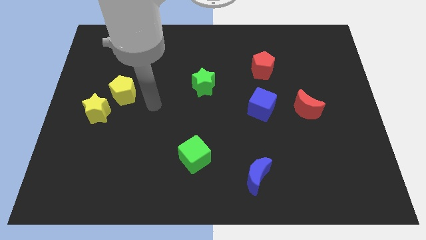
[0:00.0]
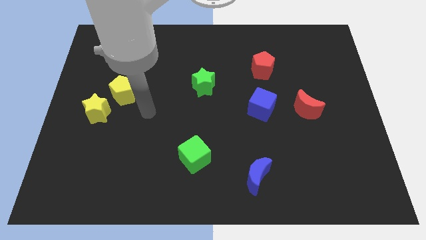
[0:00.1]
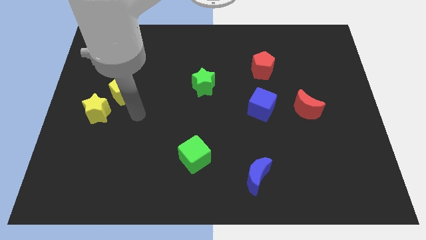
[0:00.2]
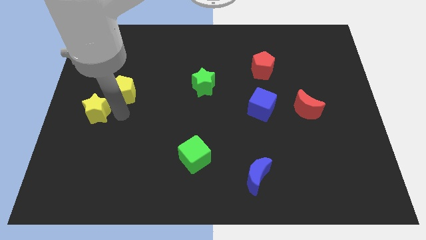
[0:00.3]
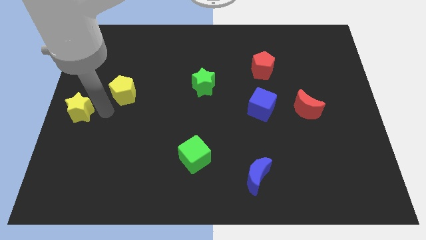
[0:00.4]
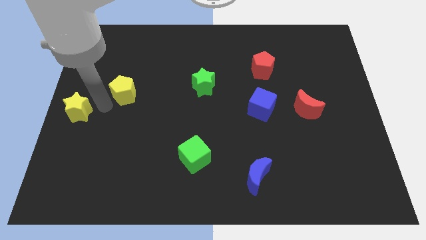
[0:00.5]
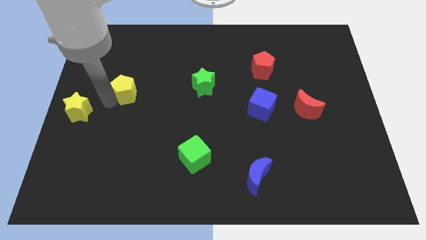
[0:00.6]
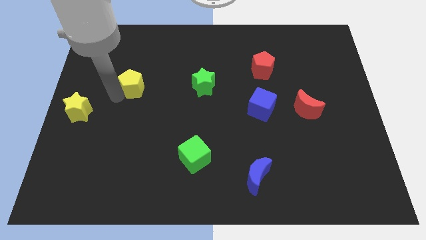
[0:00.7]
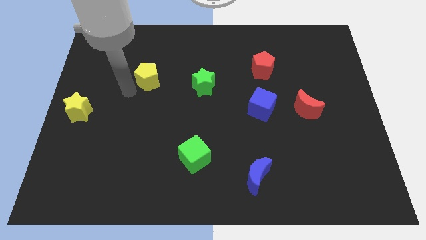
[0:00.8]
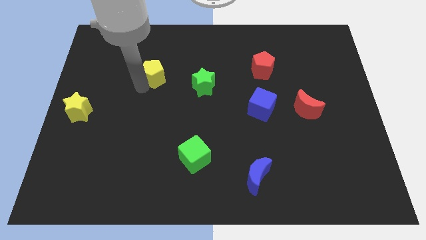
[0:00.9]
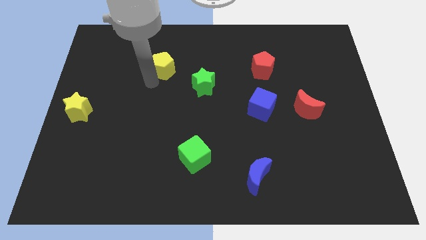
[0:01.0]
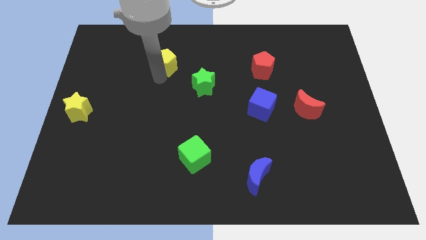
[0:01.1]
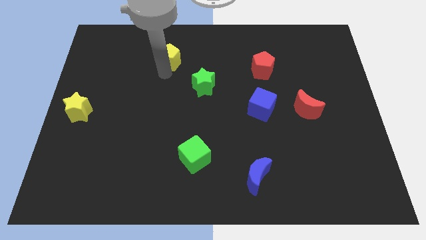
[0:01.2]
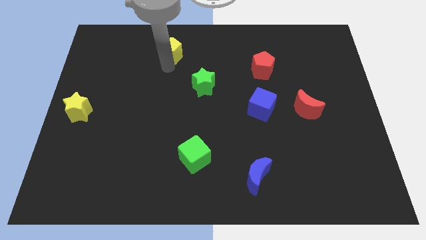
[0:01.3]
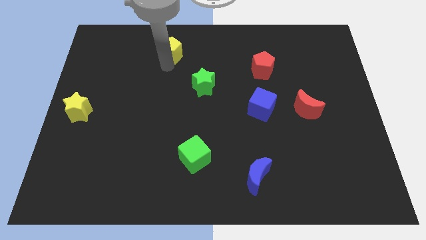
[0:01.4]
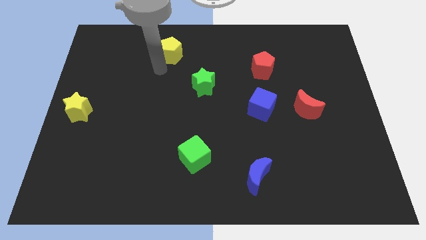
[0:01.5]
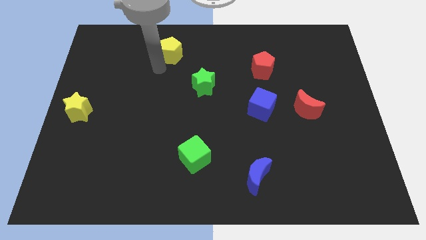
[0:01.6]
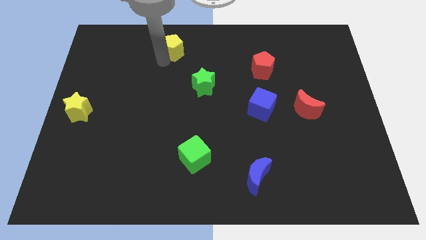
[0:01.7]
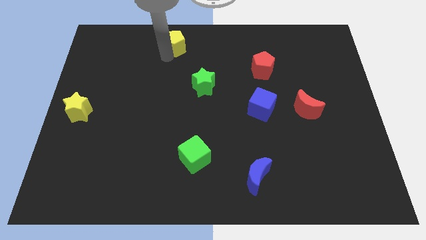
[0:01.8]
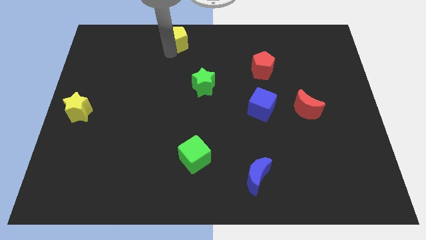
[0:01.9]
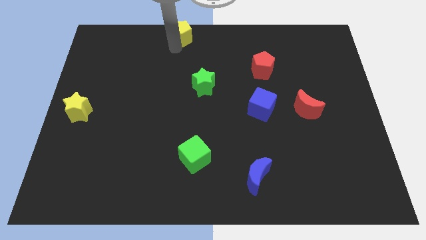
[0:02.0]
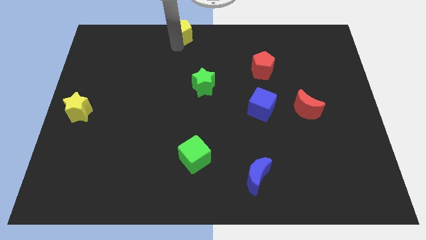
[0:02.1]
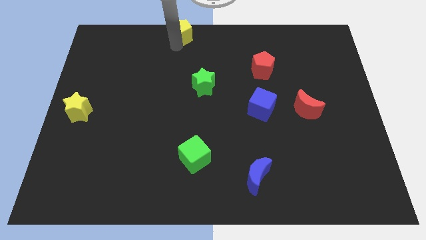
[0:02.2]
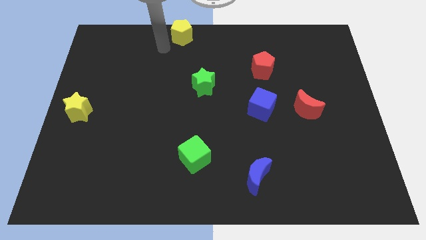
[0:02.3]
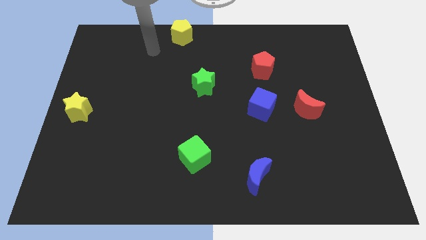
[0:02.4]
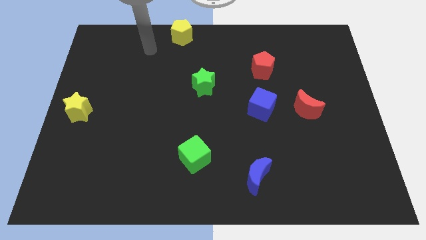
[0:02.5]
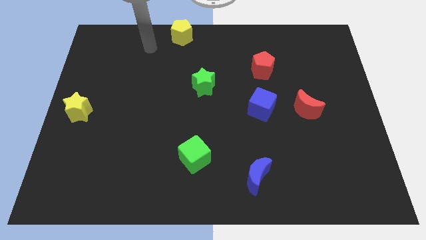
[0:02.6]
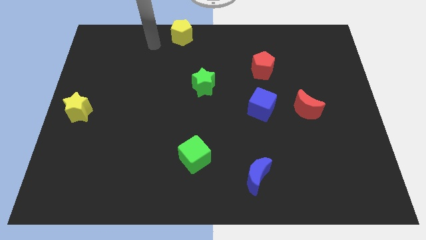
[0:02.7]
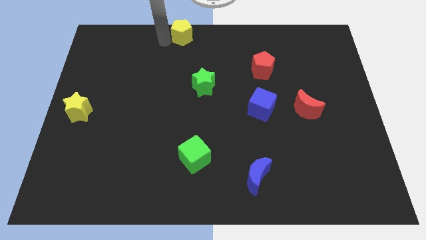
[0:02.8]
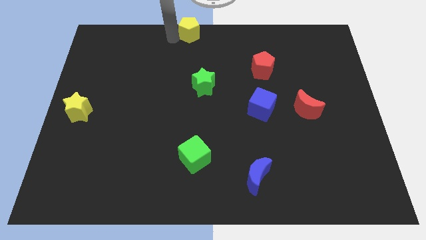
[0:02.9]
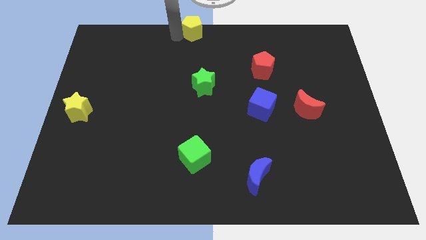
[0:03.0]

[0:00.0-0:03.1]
place the yellow pentagon diagonal to the red pentagon

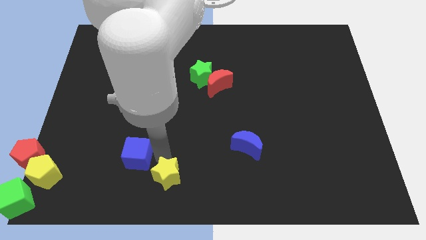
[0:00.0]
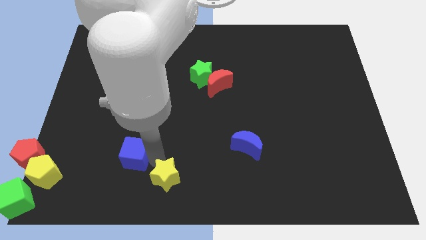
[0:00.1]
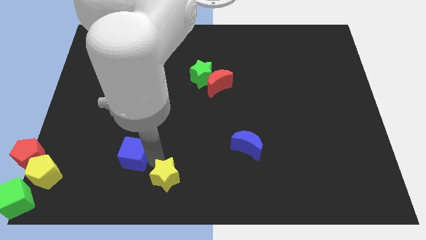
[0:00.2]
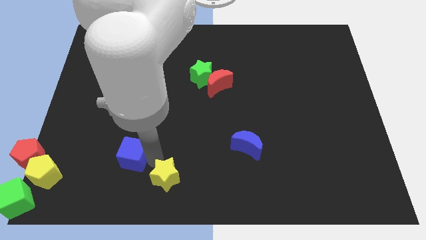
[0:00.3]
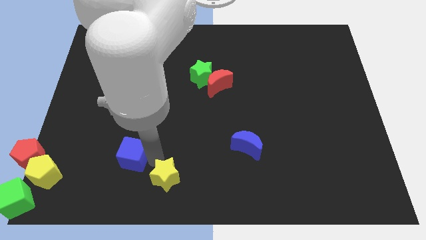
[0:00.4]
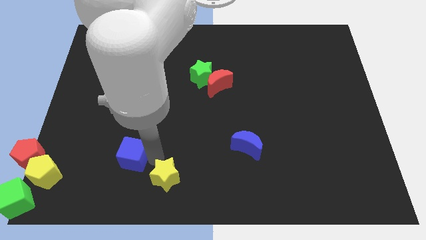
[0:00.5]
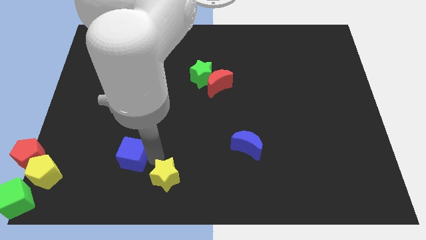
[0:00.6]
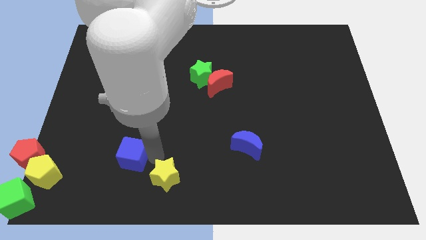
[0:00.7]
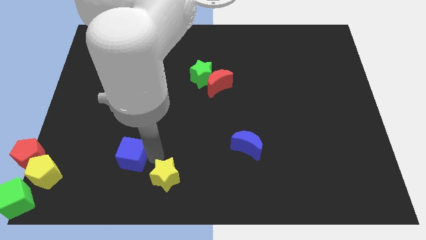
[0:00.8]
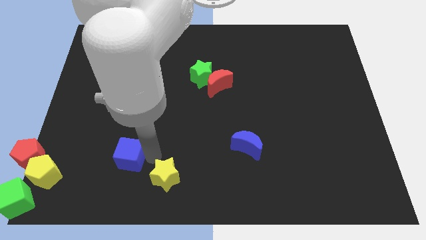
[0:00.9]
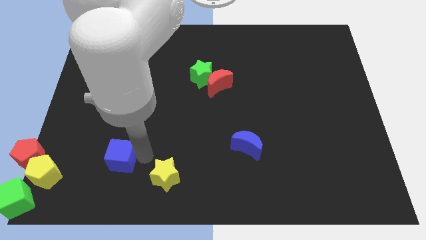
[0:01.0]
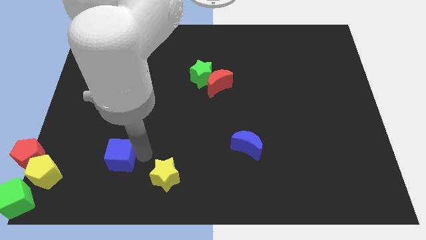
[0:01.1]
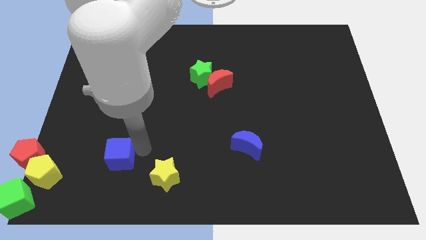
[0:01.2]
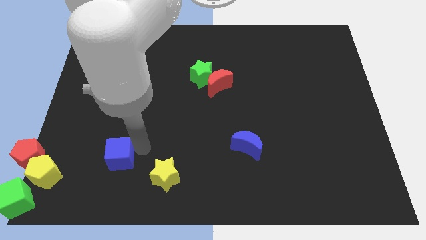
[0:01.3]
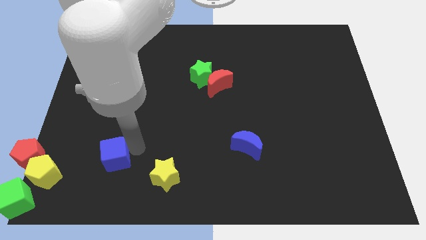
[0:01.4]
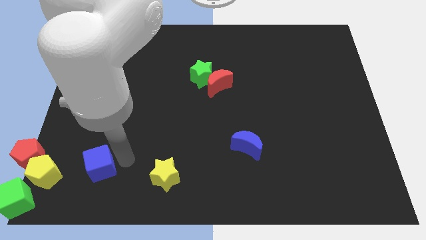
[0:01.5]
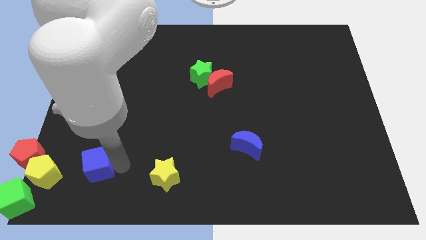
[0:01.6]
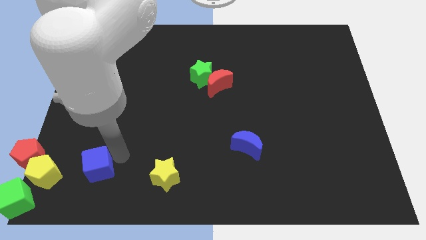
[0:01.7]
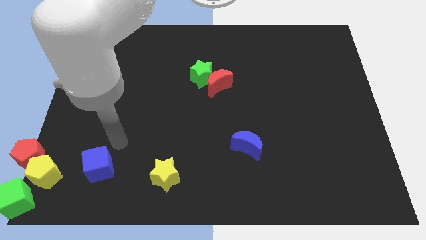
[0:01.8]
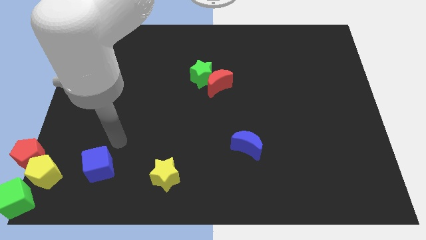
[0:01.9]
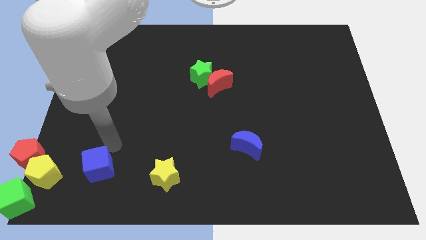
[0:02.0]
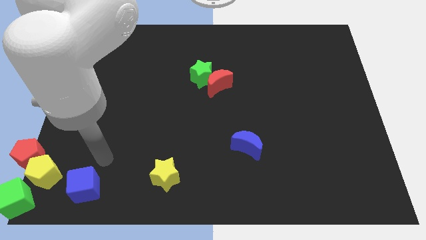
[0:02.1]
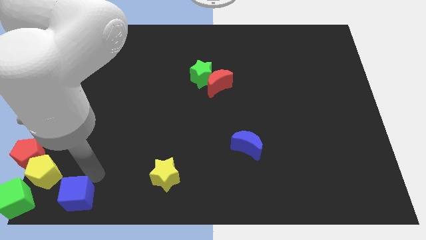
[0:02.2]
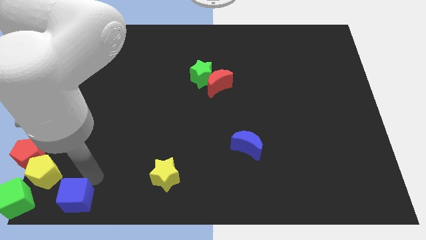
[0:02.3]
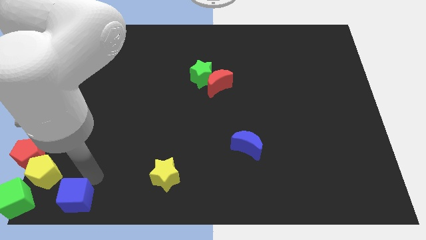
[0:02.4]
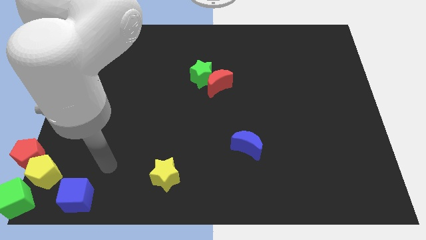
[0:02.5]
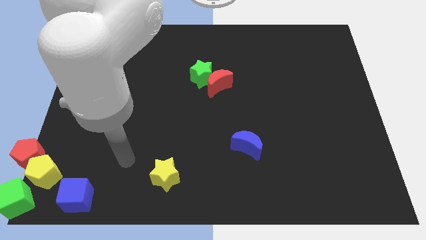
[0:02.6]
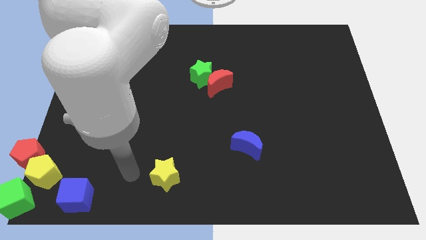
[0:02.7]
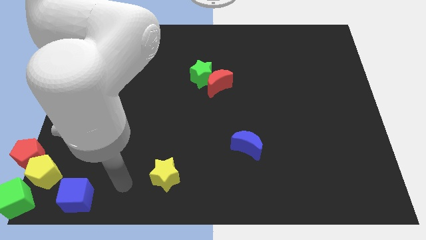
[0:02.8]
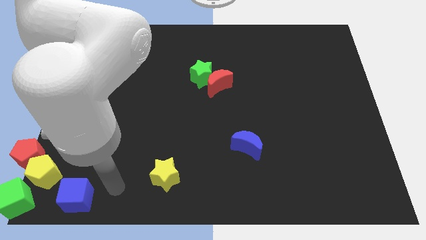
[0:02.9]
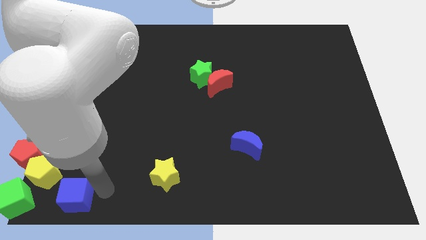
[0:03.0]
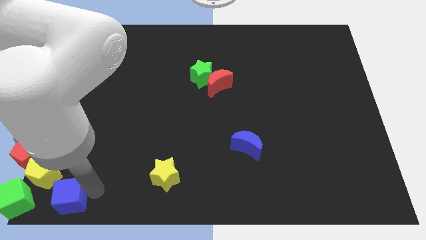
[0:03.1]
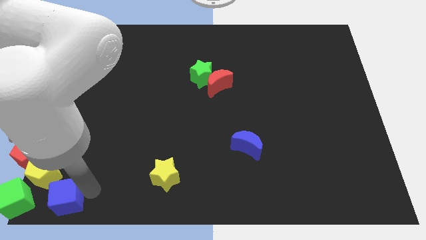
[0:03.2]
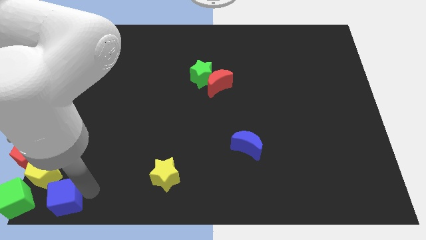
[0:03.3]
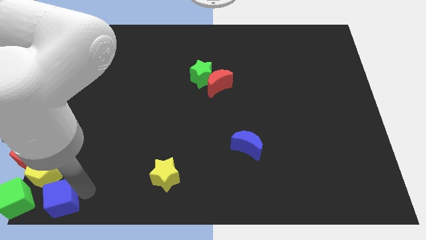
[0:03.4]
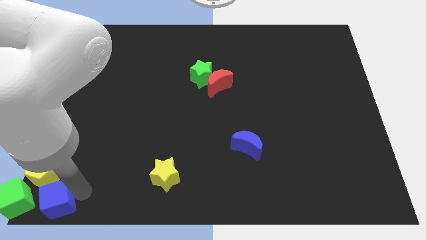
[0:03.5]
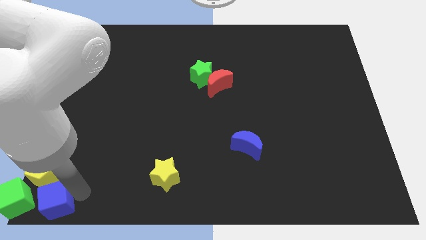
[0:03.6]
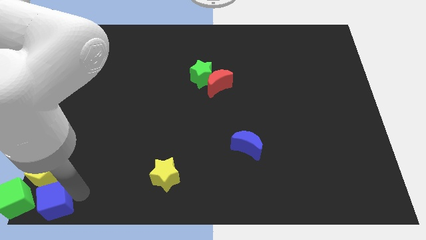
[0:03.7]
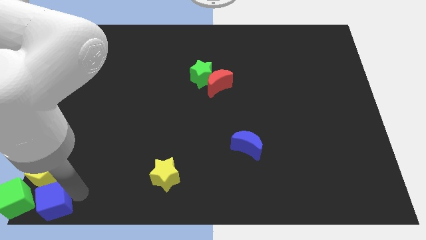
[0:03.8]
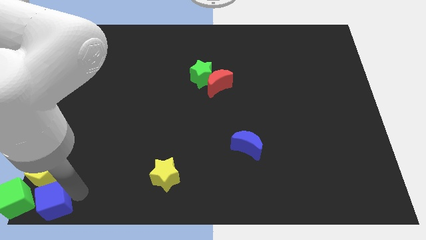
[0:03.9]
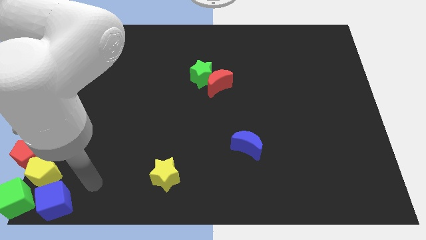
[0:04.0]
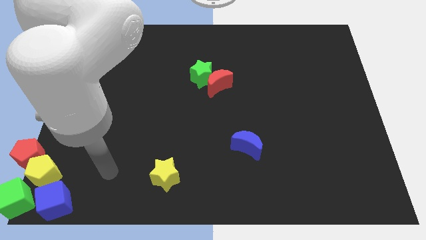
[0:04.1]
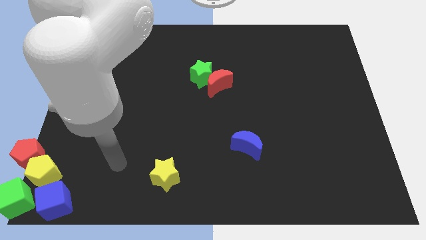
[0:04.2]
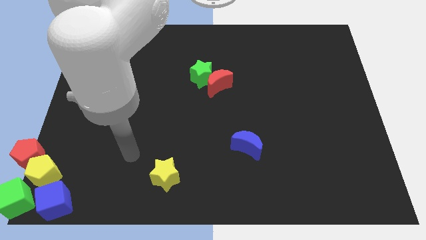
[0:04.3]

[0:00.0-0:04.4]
place the blue cube close to the bottom of the yellow pentagon

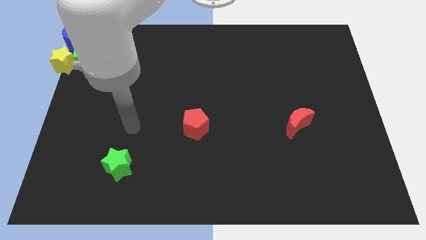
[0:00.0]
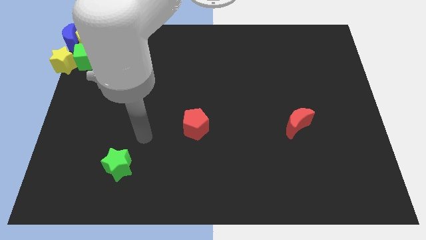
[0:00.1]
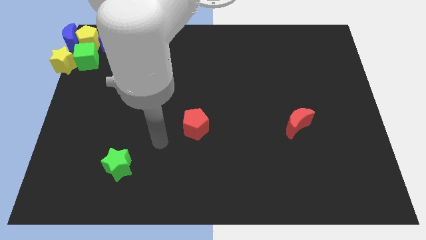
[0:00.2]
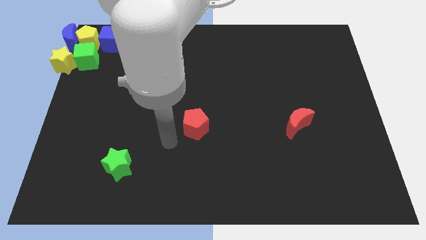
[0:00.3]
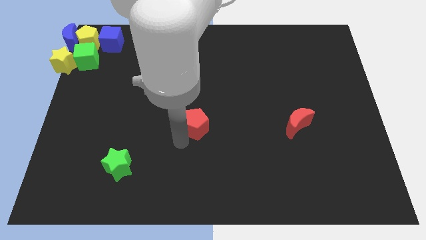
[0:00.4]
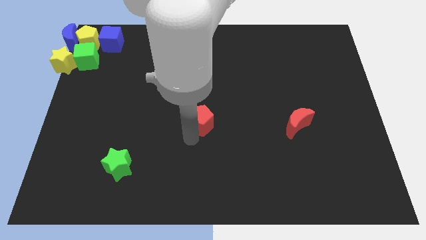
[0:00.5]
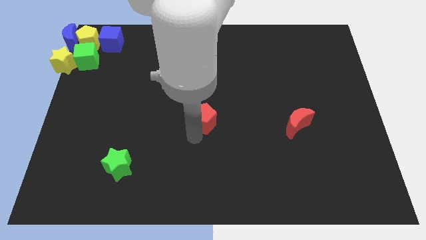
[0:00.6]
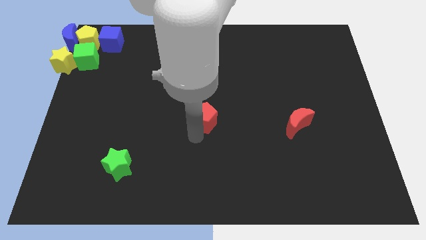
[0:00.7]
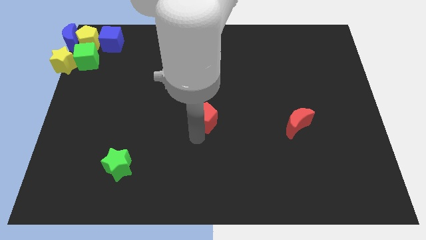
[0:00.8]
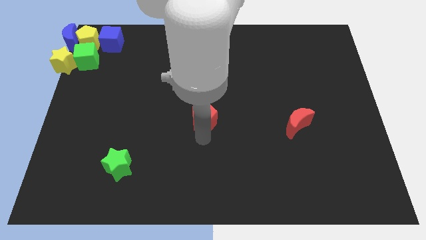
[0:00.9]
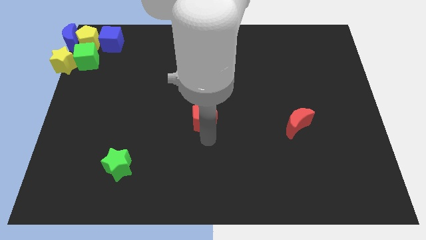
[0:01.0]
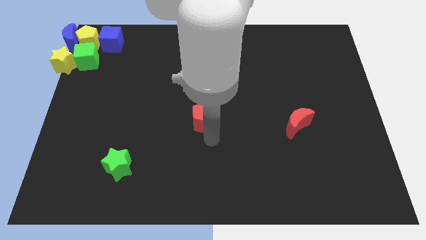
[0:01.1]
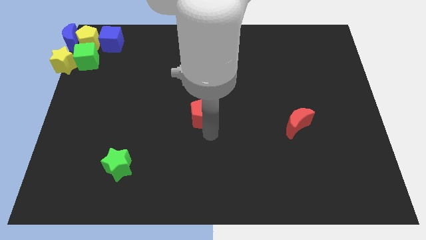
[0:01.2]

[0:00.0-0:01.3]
slide the red pentagon slightly up
